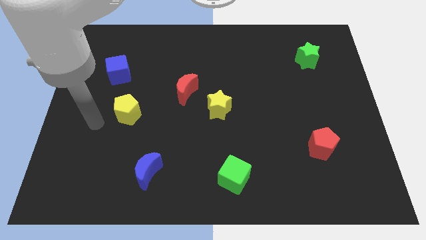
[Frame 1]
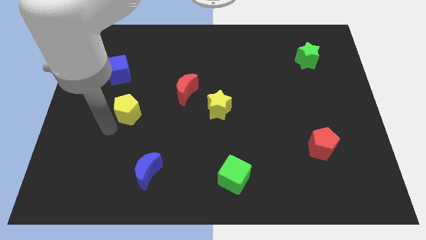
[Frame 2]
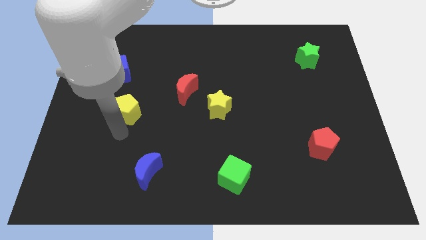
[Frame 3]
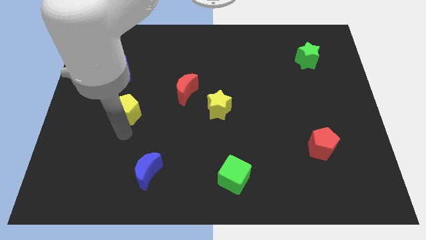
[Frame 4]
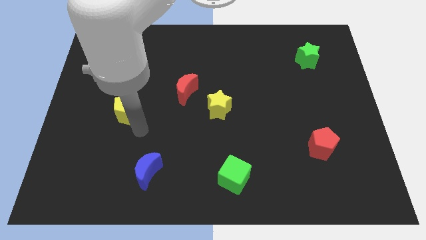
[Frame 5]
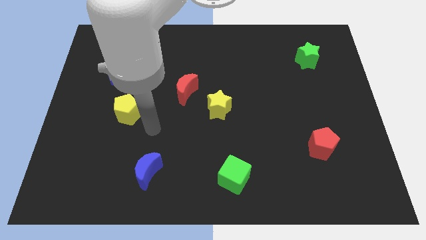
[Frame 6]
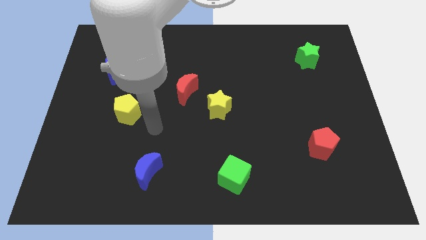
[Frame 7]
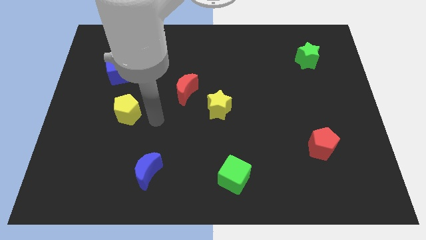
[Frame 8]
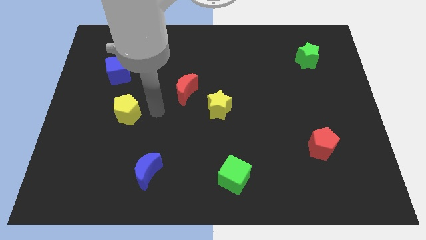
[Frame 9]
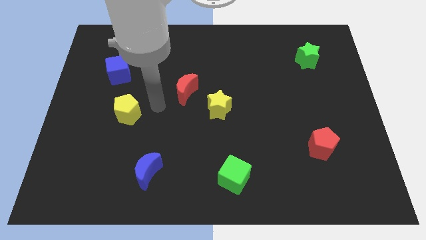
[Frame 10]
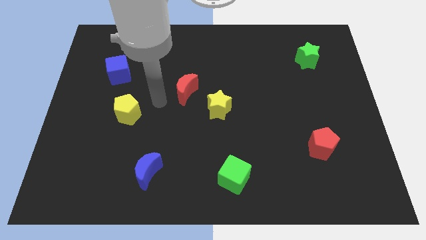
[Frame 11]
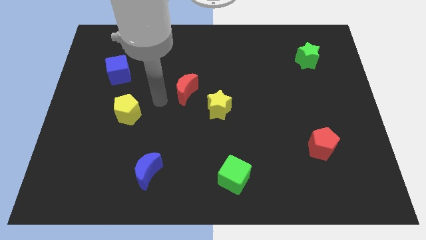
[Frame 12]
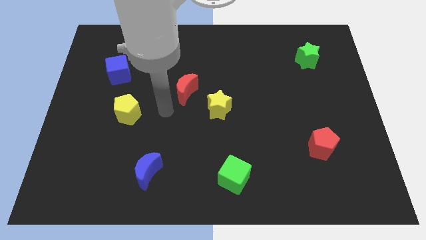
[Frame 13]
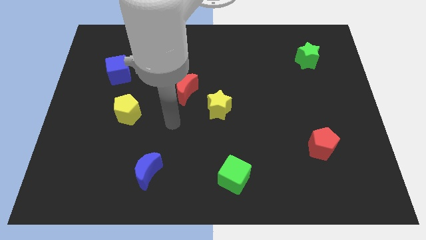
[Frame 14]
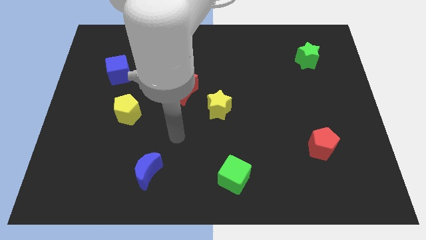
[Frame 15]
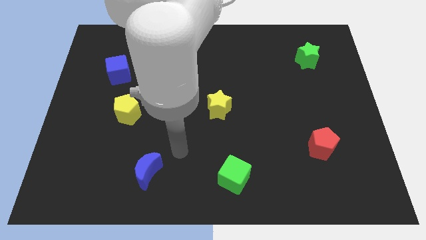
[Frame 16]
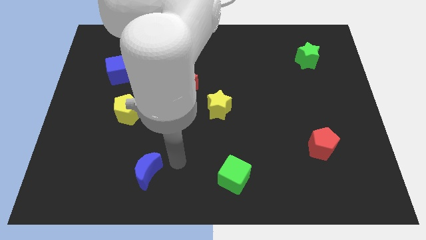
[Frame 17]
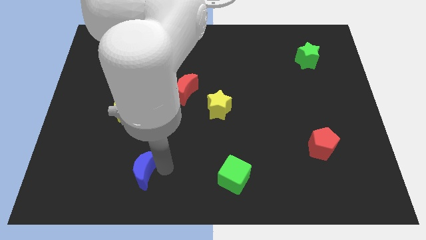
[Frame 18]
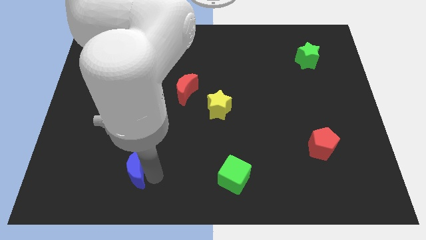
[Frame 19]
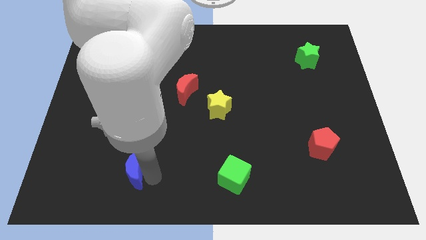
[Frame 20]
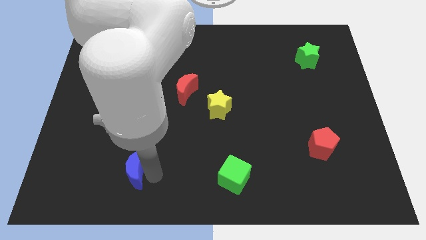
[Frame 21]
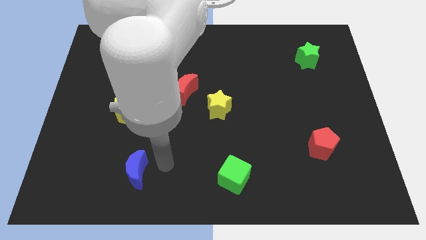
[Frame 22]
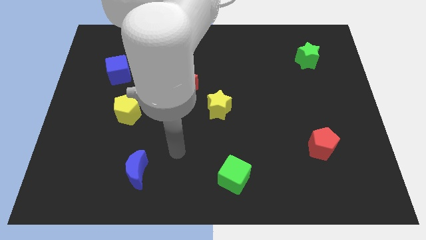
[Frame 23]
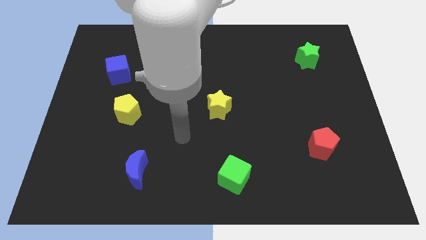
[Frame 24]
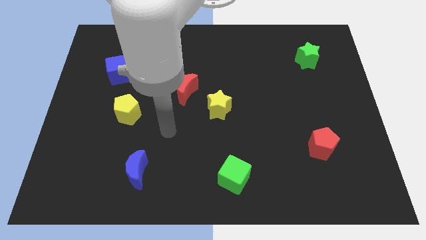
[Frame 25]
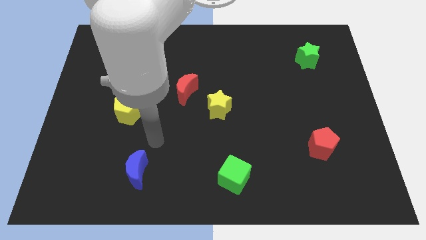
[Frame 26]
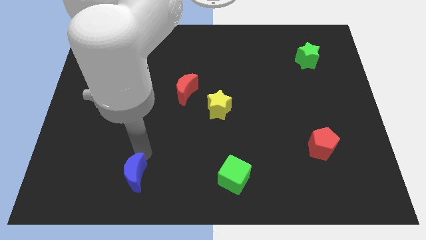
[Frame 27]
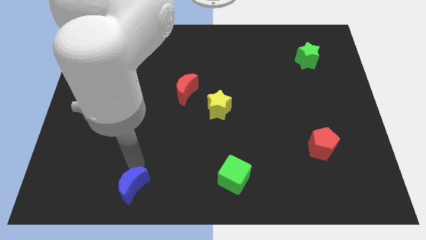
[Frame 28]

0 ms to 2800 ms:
move your arm towards the blue crescent

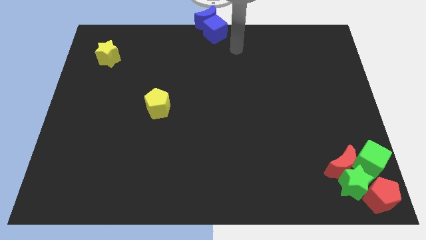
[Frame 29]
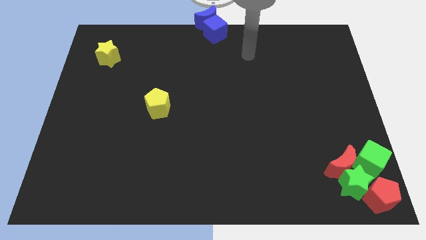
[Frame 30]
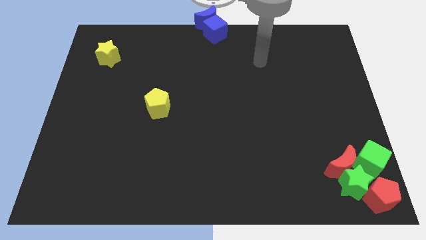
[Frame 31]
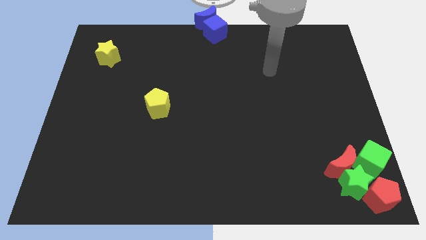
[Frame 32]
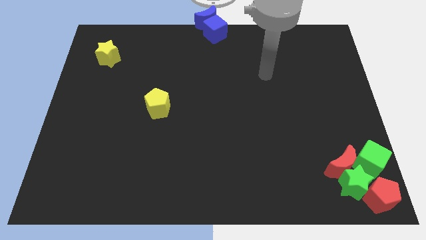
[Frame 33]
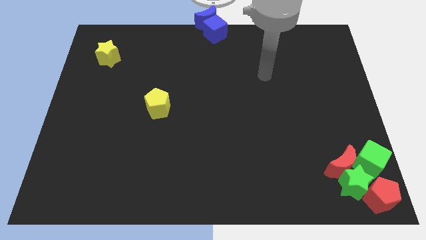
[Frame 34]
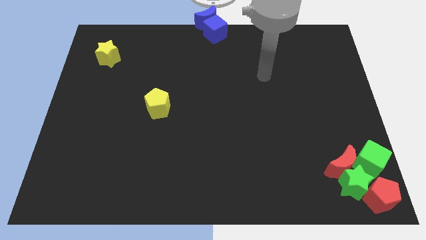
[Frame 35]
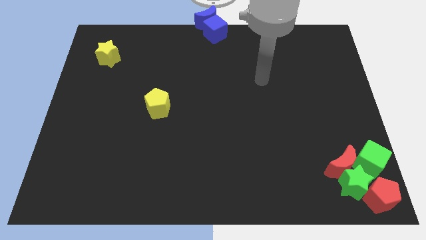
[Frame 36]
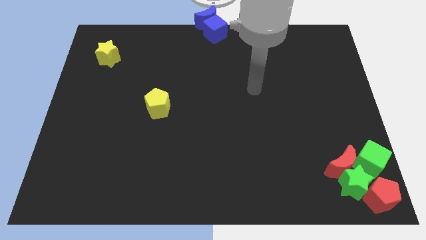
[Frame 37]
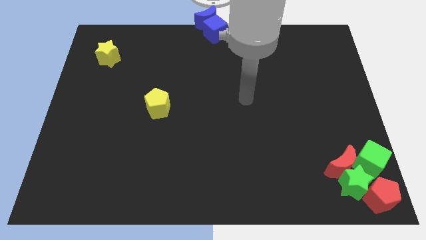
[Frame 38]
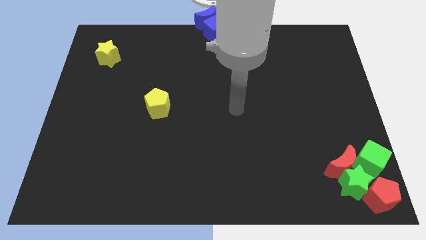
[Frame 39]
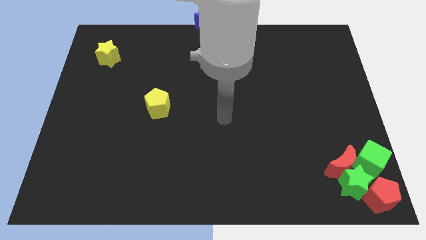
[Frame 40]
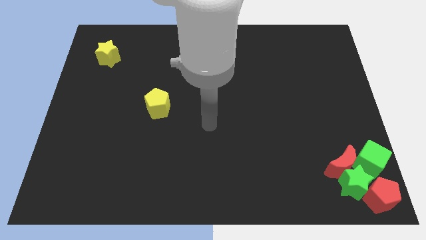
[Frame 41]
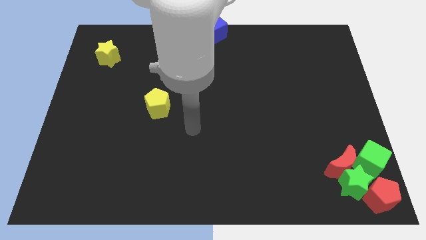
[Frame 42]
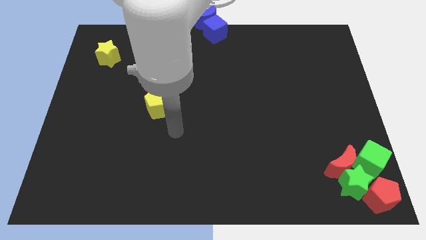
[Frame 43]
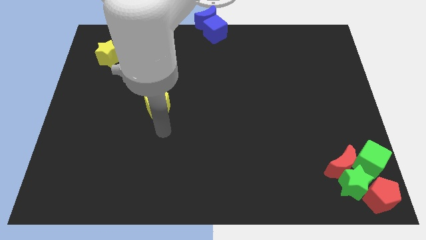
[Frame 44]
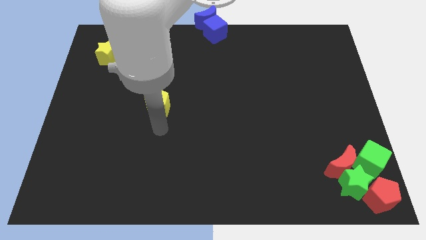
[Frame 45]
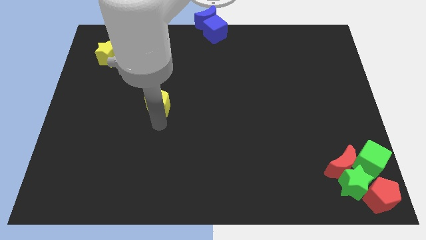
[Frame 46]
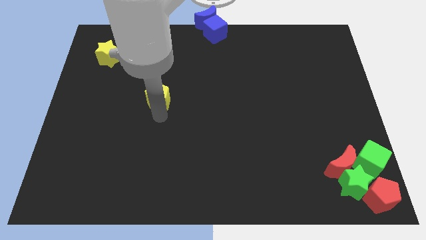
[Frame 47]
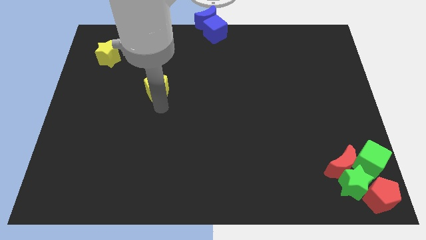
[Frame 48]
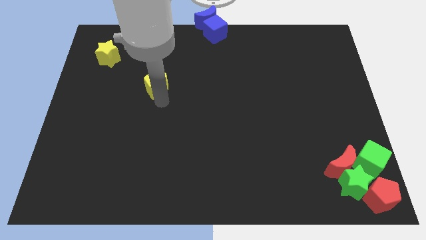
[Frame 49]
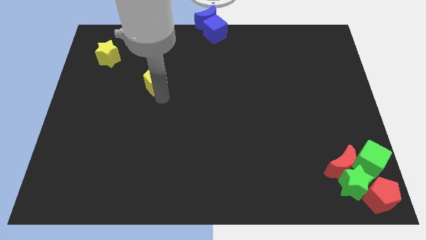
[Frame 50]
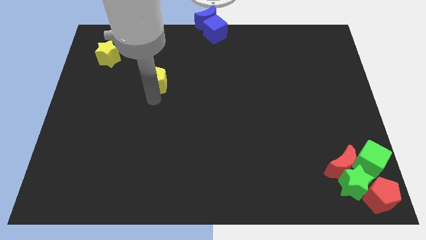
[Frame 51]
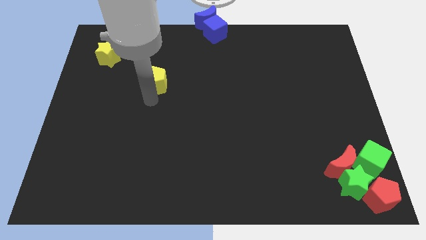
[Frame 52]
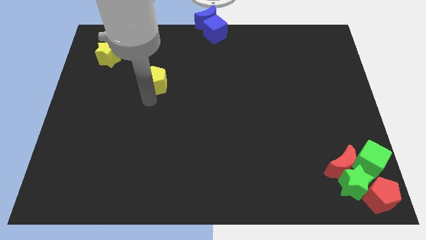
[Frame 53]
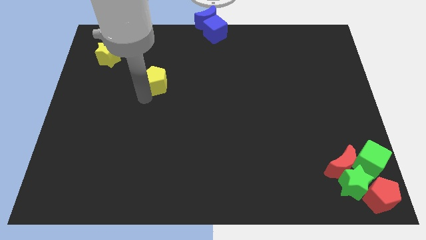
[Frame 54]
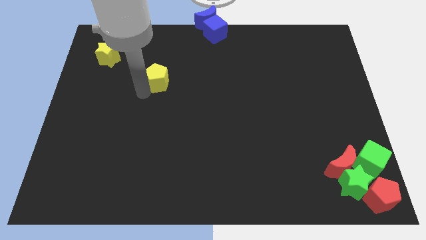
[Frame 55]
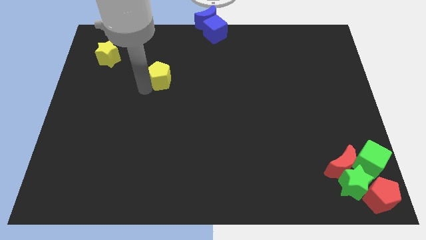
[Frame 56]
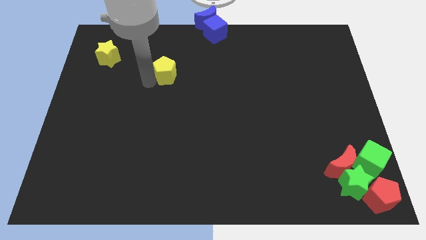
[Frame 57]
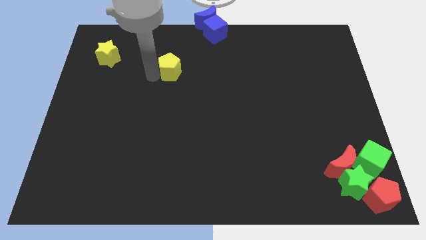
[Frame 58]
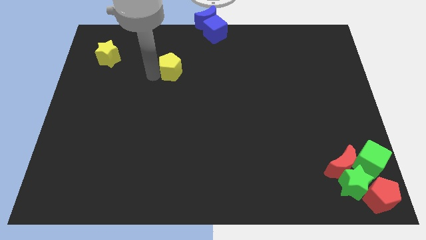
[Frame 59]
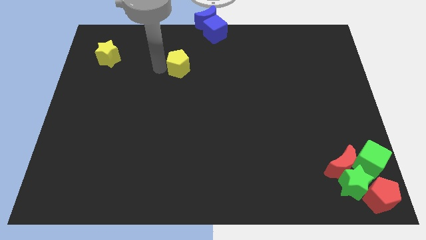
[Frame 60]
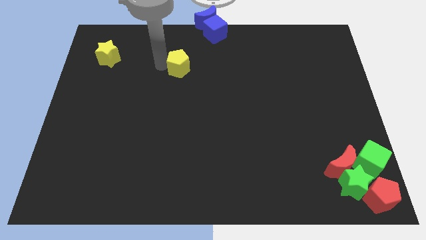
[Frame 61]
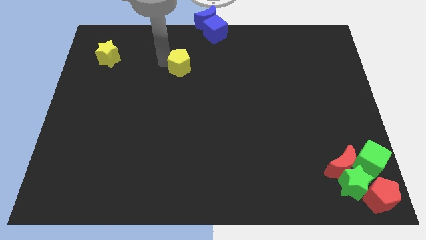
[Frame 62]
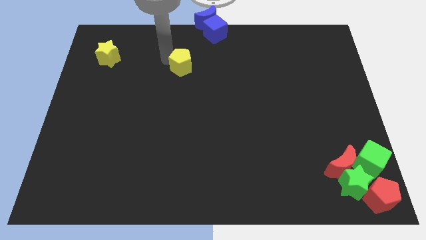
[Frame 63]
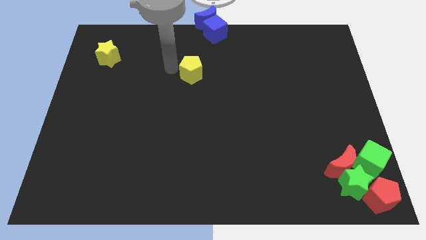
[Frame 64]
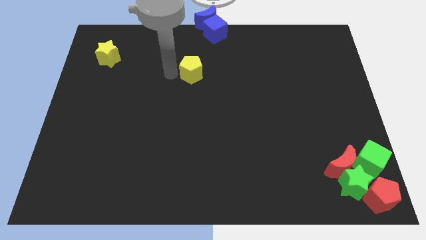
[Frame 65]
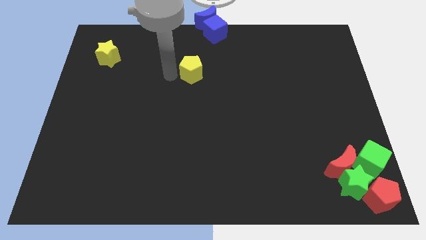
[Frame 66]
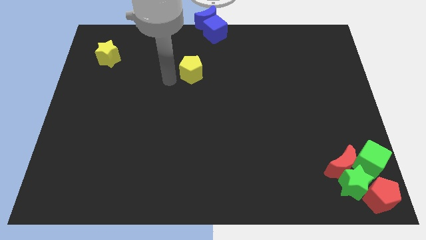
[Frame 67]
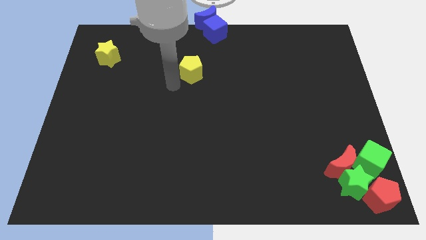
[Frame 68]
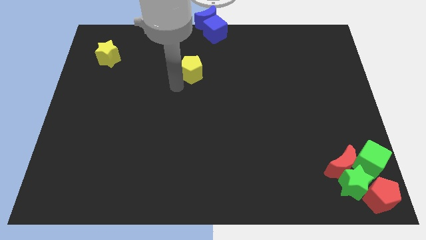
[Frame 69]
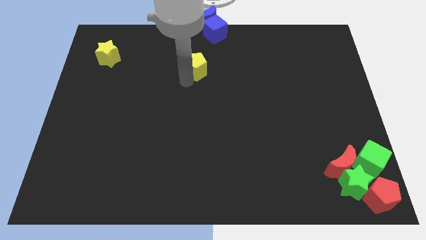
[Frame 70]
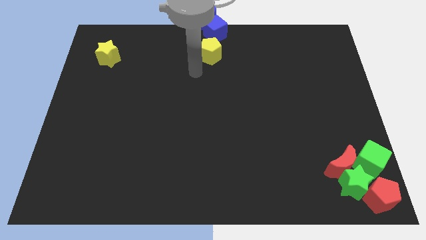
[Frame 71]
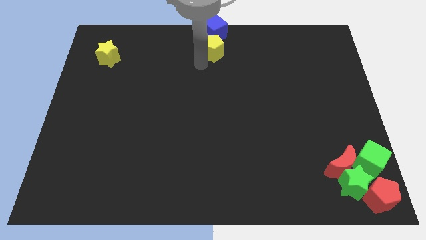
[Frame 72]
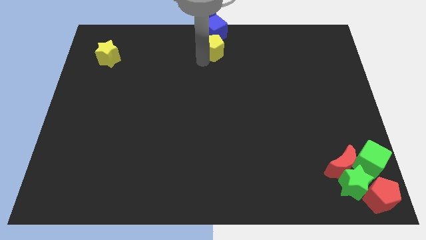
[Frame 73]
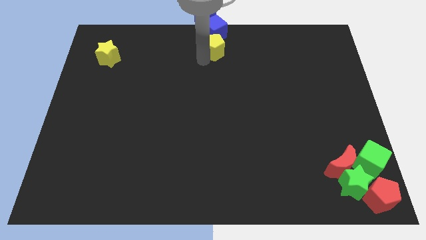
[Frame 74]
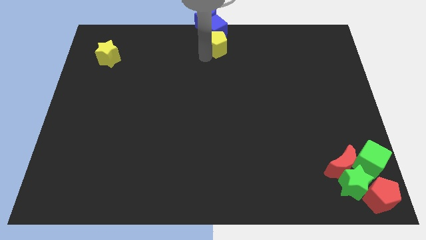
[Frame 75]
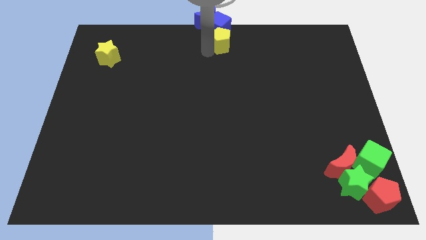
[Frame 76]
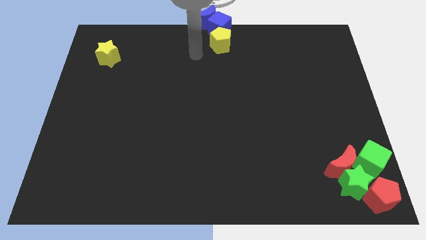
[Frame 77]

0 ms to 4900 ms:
move the yellow pentagon into the blue cube

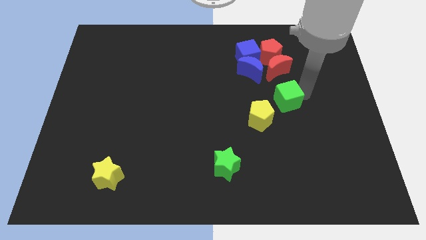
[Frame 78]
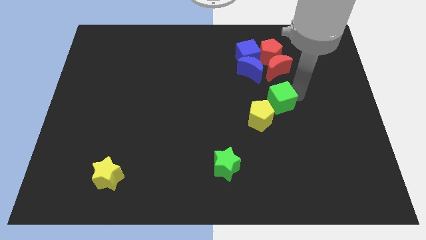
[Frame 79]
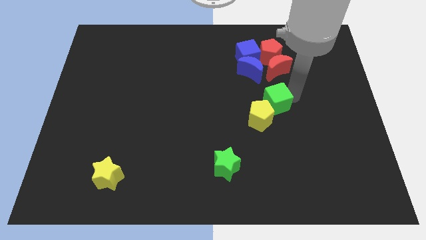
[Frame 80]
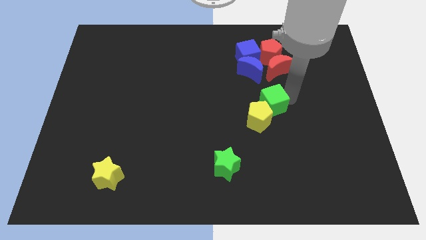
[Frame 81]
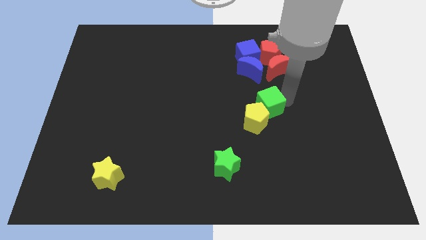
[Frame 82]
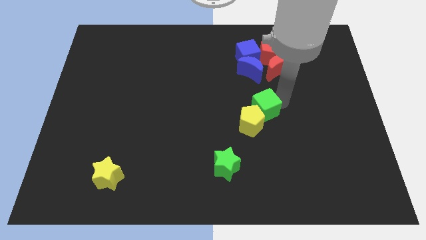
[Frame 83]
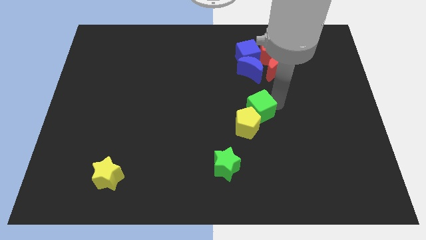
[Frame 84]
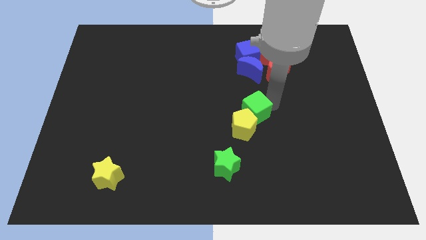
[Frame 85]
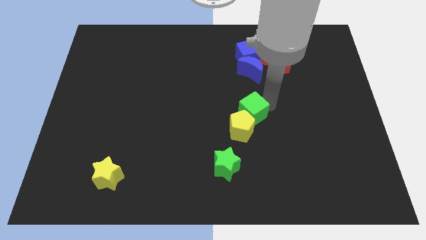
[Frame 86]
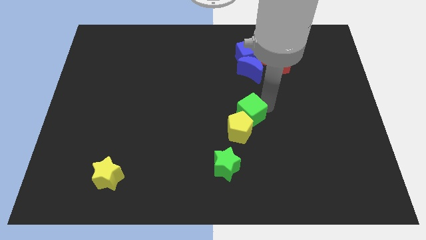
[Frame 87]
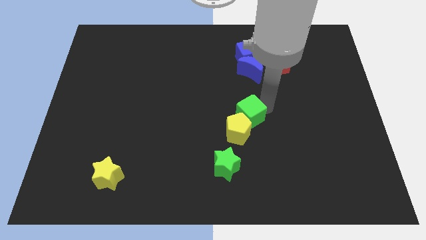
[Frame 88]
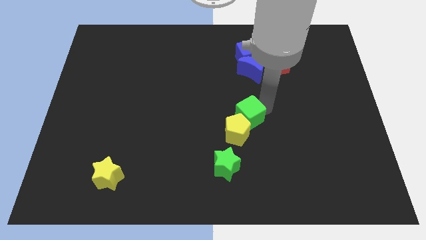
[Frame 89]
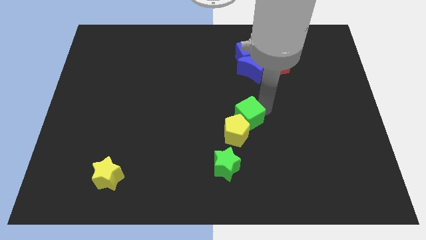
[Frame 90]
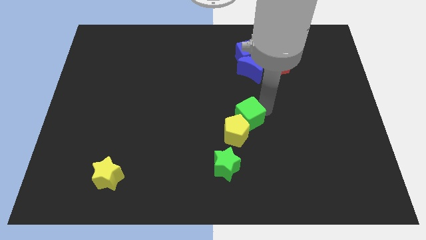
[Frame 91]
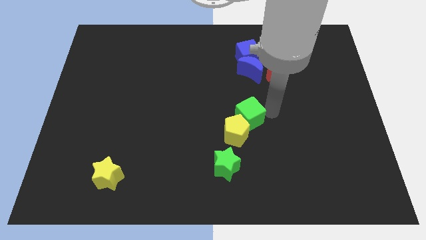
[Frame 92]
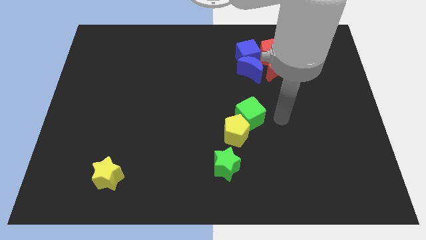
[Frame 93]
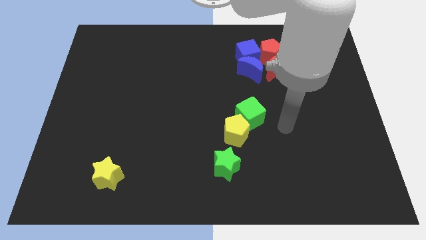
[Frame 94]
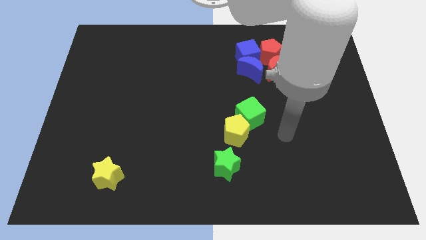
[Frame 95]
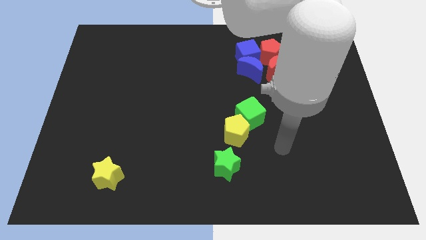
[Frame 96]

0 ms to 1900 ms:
push the green cube into the yellow pentagon
